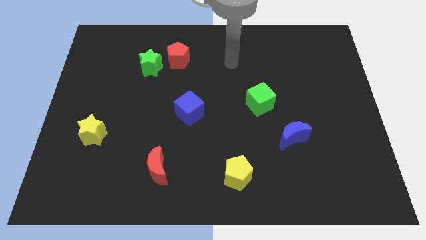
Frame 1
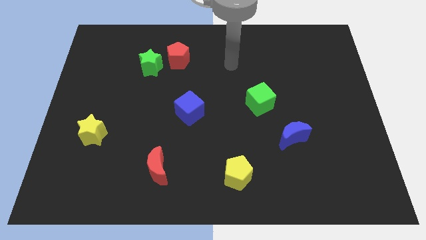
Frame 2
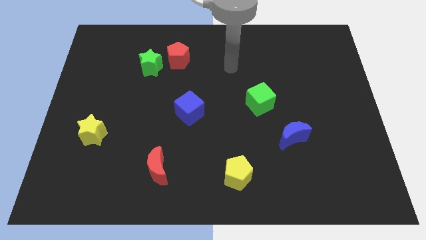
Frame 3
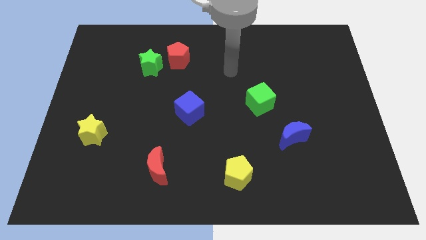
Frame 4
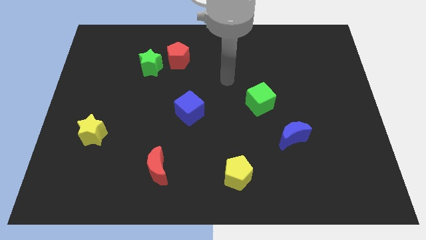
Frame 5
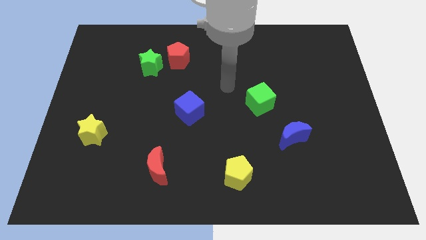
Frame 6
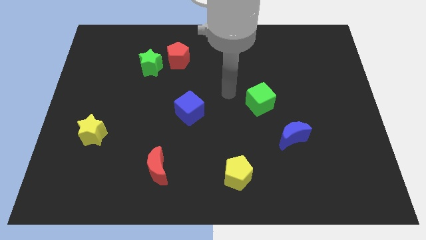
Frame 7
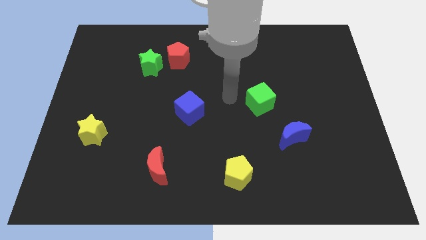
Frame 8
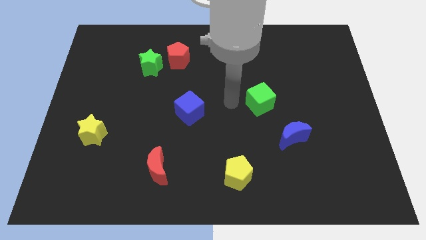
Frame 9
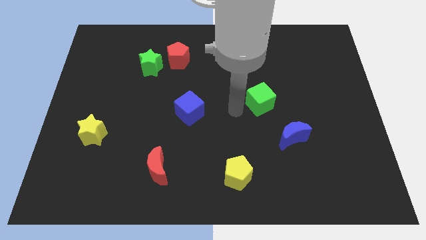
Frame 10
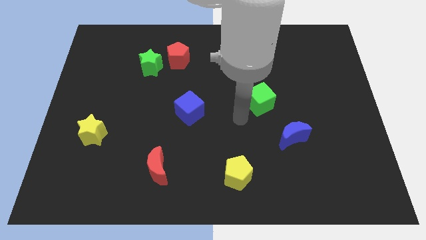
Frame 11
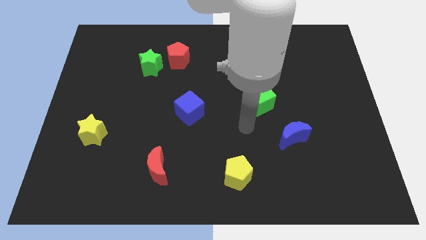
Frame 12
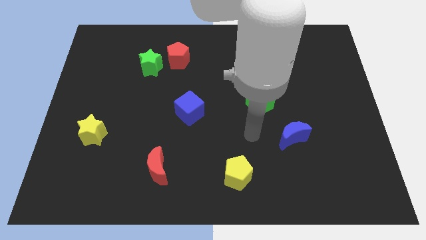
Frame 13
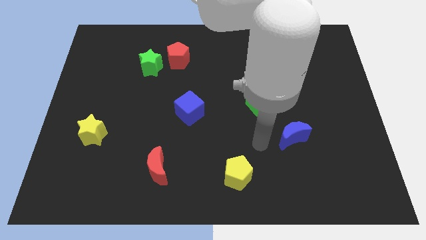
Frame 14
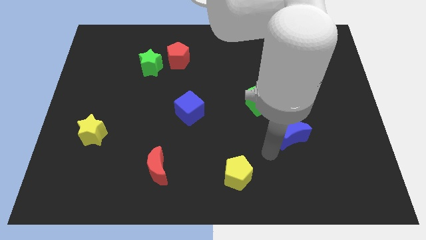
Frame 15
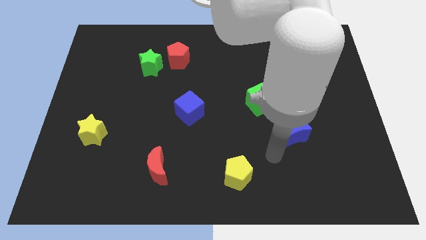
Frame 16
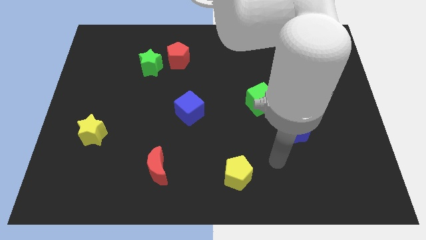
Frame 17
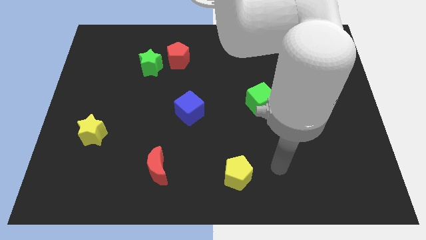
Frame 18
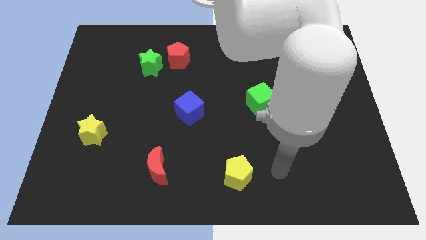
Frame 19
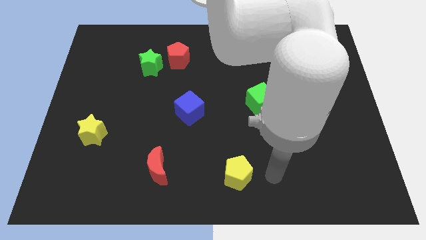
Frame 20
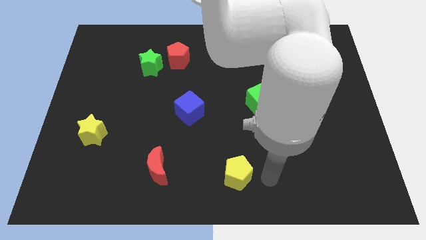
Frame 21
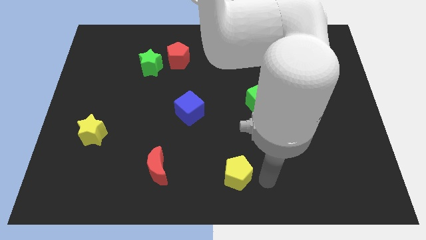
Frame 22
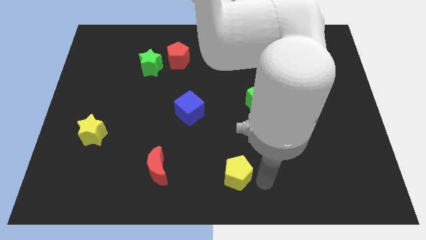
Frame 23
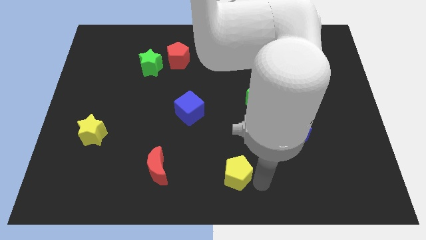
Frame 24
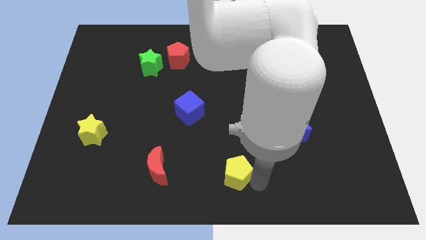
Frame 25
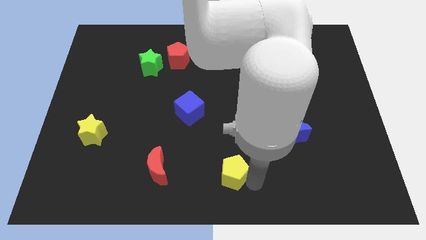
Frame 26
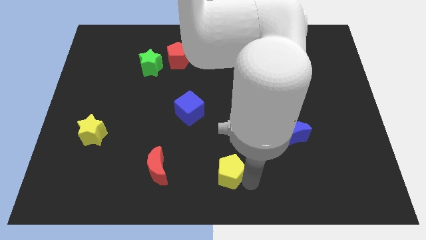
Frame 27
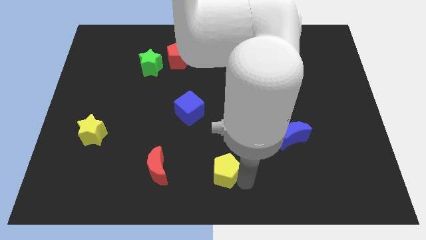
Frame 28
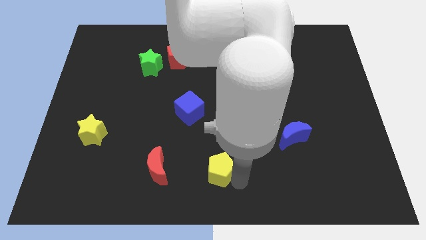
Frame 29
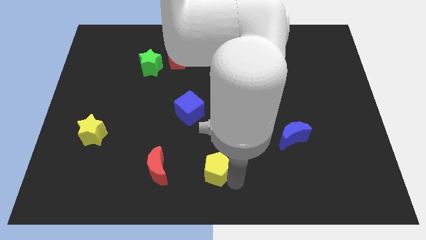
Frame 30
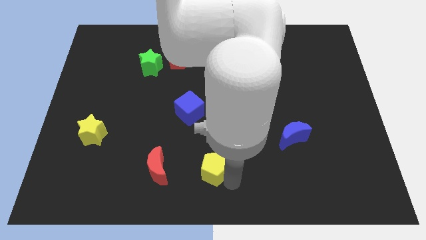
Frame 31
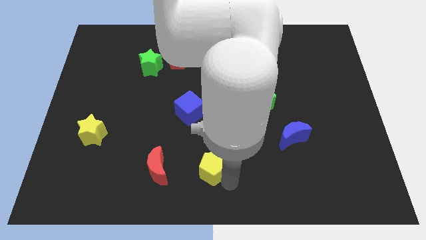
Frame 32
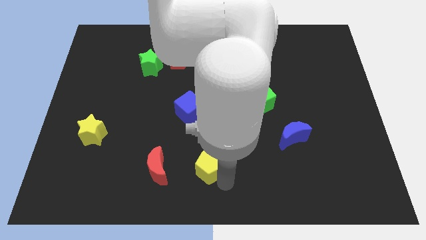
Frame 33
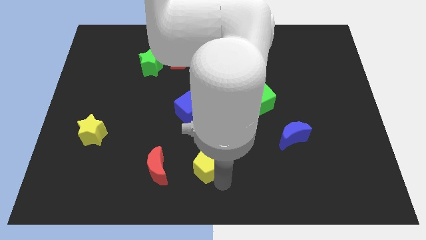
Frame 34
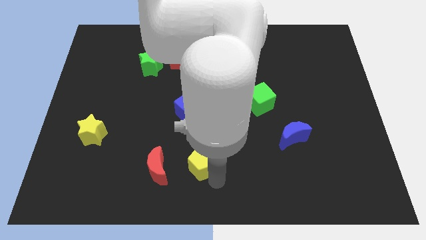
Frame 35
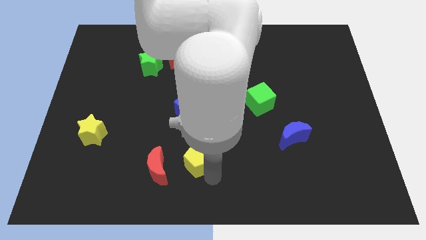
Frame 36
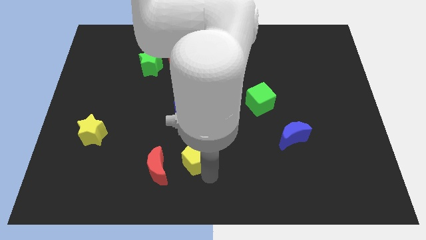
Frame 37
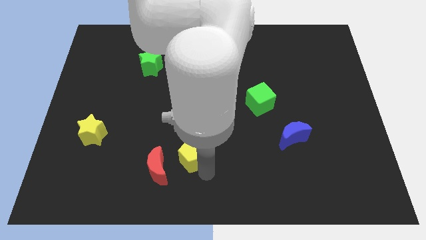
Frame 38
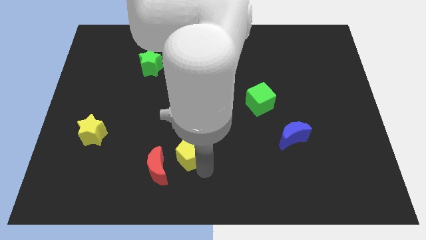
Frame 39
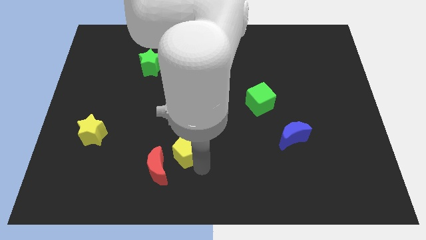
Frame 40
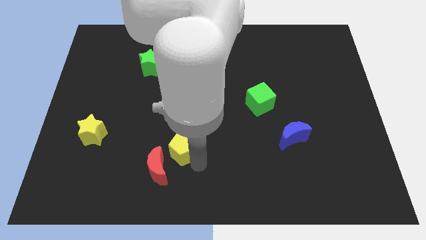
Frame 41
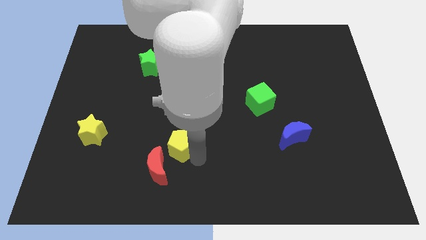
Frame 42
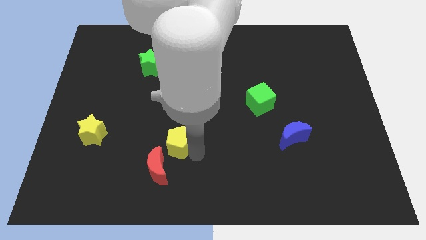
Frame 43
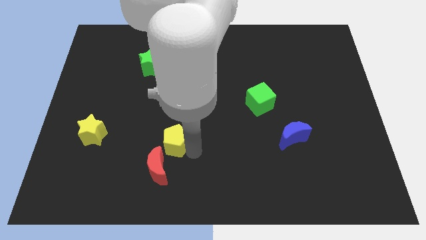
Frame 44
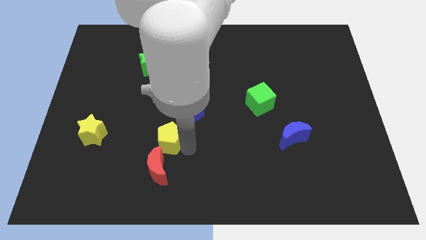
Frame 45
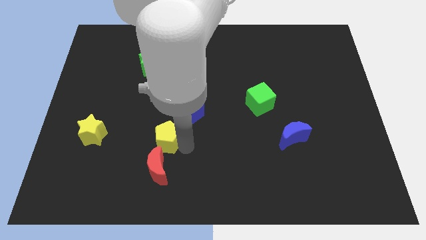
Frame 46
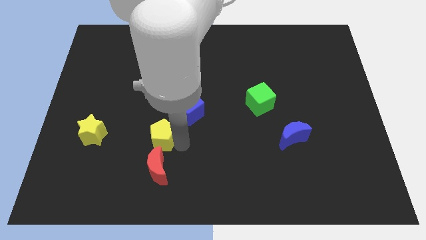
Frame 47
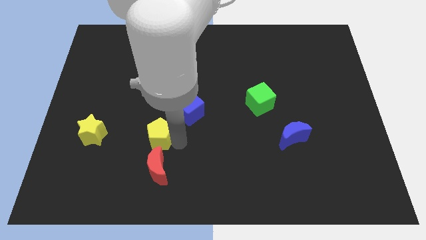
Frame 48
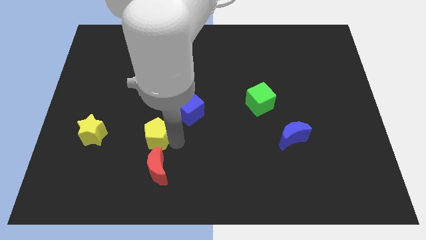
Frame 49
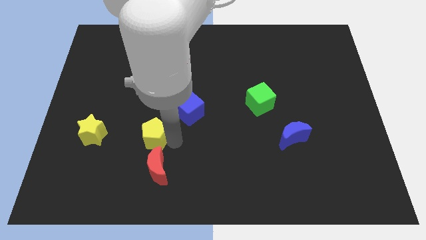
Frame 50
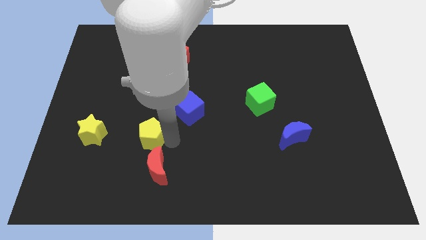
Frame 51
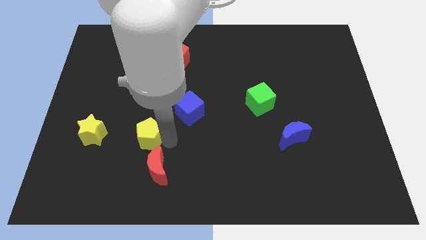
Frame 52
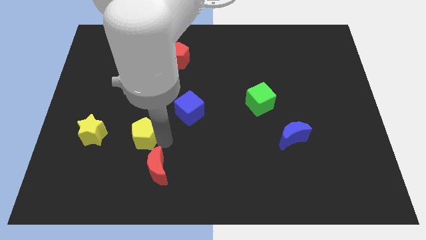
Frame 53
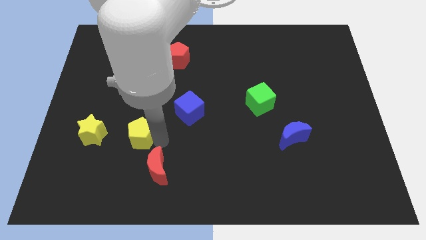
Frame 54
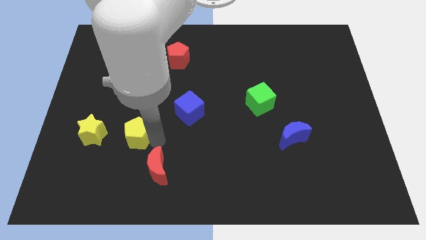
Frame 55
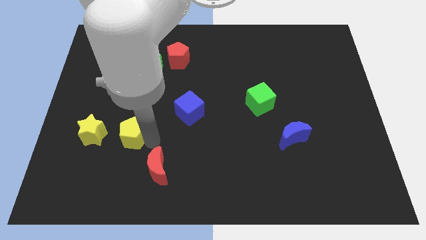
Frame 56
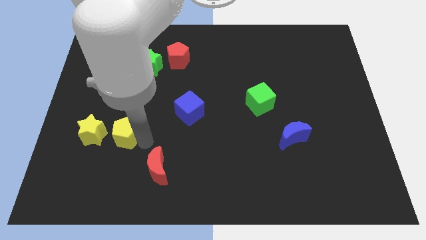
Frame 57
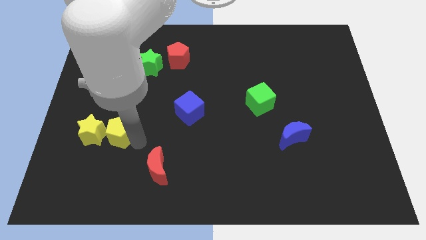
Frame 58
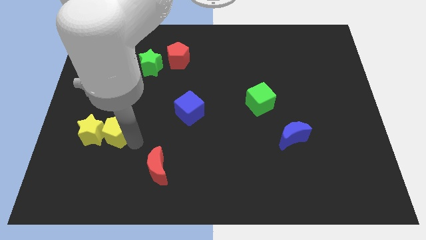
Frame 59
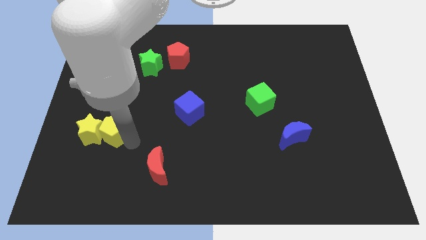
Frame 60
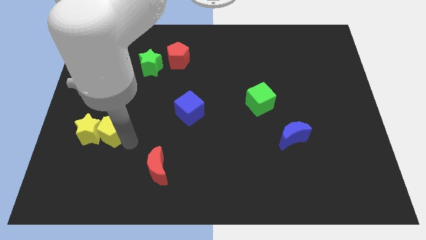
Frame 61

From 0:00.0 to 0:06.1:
slide the yellow pentagon next to the yellow star

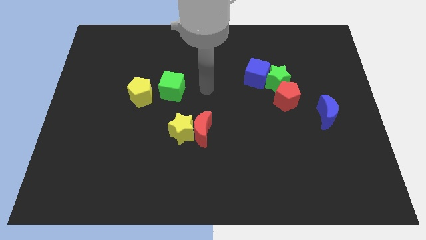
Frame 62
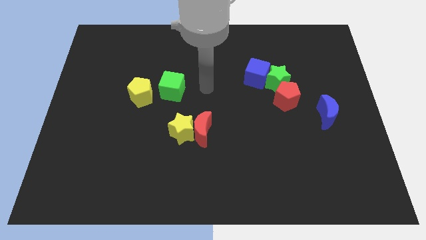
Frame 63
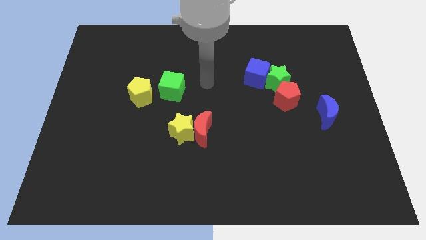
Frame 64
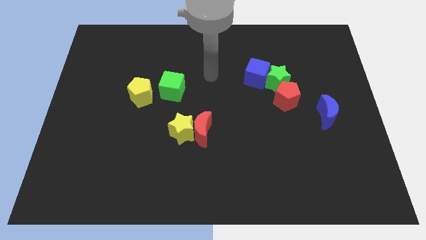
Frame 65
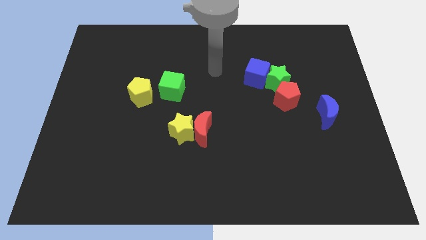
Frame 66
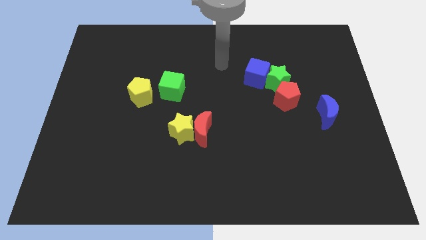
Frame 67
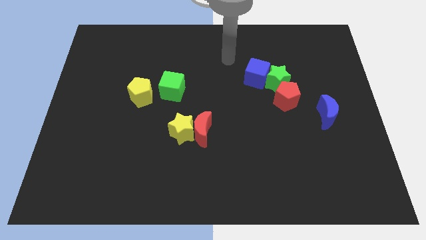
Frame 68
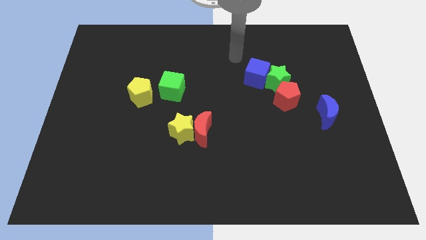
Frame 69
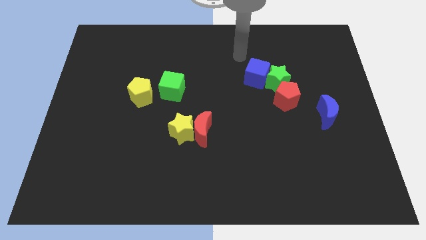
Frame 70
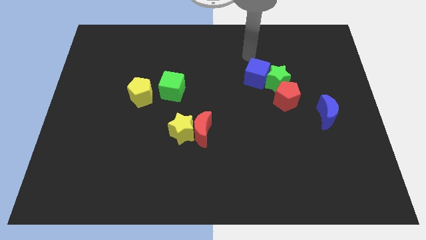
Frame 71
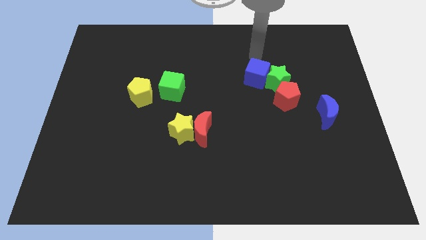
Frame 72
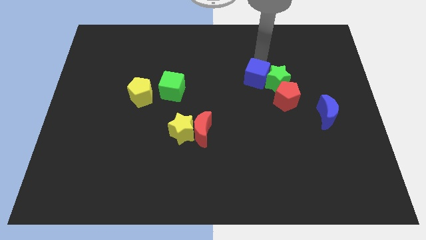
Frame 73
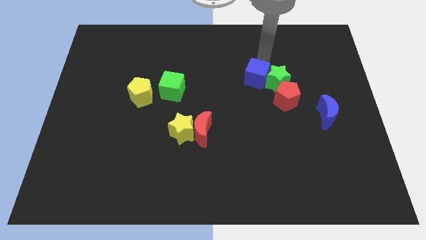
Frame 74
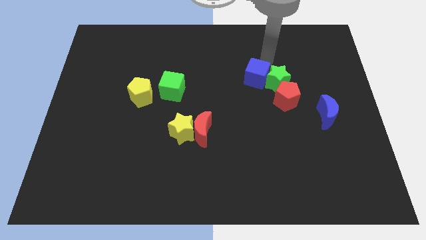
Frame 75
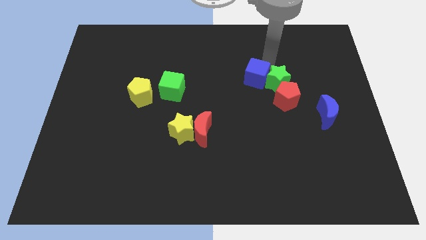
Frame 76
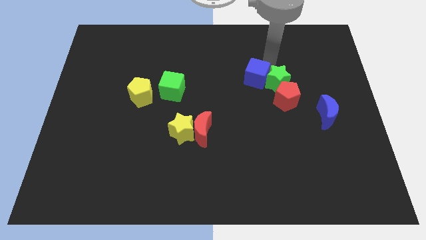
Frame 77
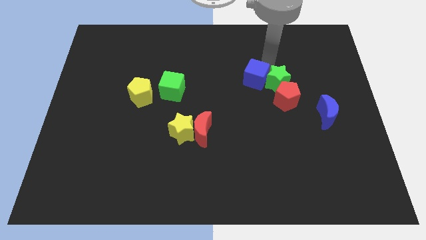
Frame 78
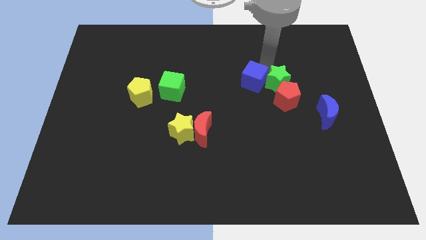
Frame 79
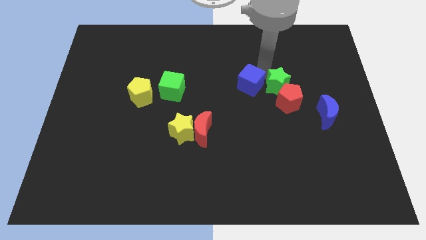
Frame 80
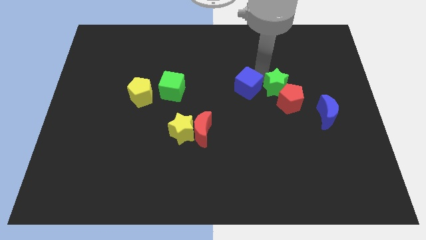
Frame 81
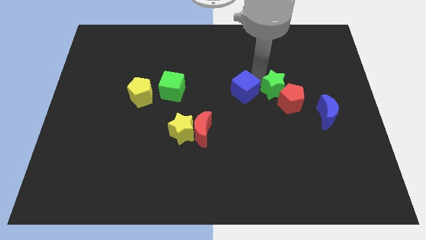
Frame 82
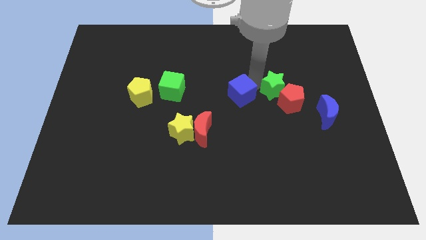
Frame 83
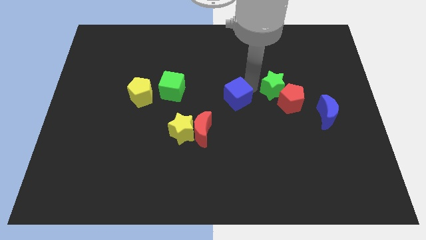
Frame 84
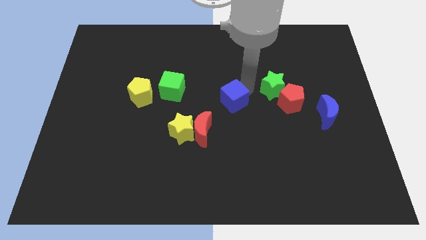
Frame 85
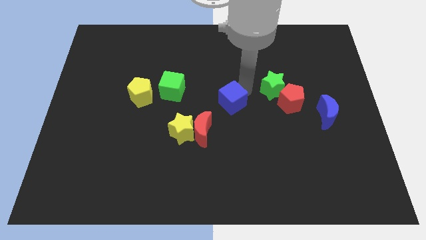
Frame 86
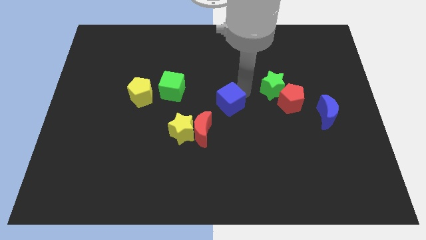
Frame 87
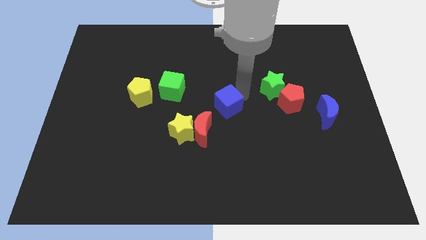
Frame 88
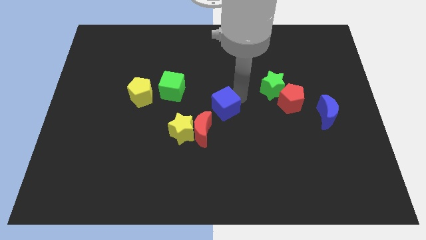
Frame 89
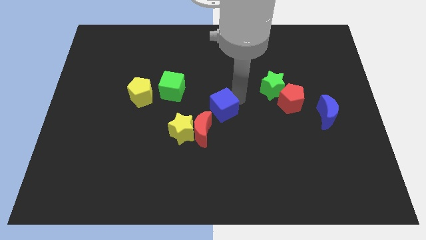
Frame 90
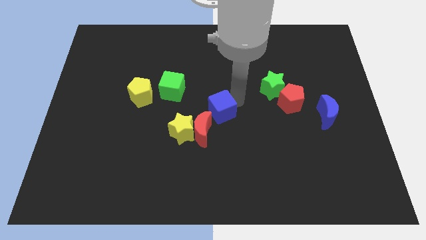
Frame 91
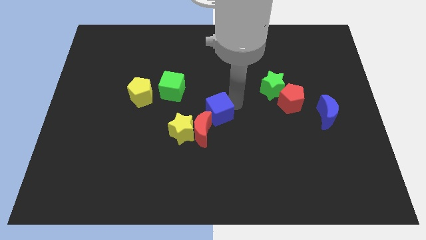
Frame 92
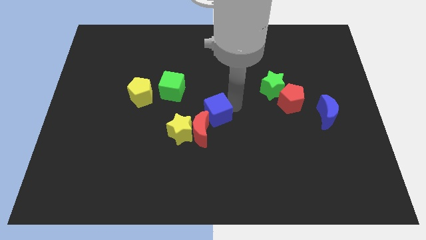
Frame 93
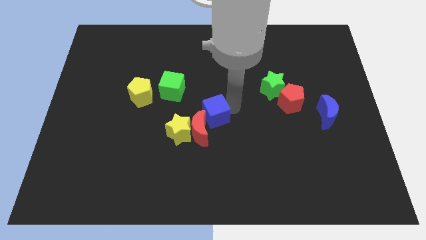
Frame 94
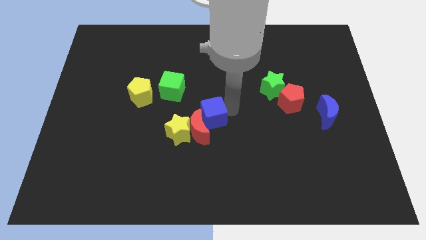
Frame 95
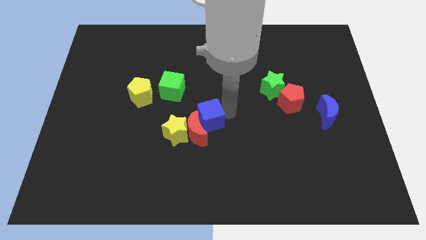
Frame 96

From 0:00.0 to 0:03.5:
move the blue cube to the red moon
